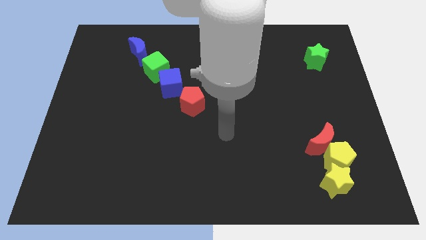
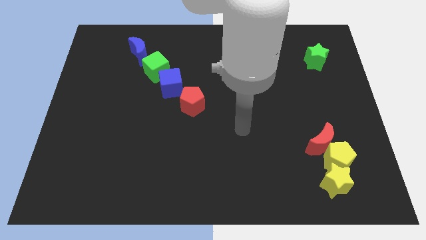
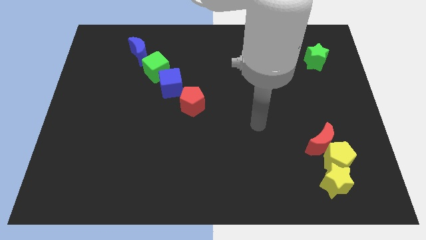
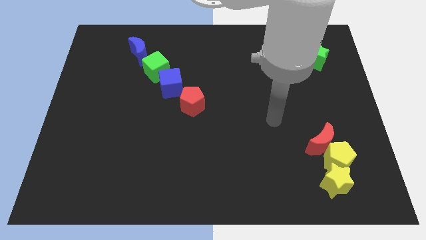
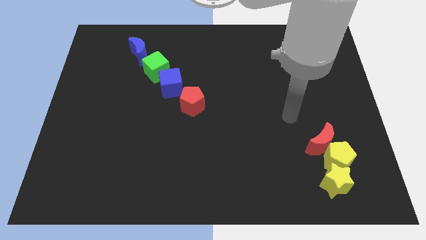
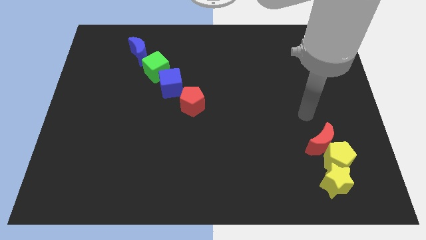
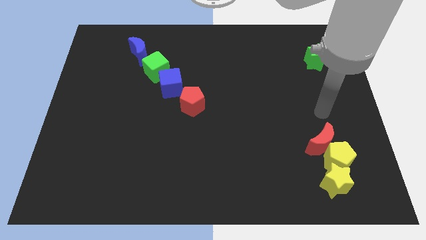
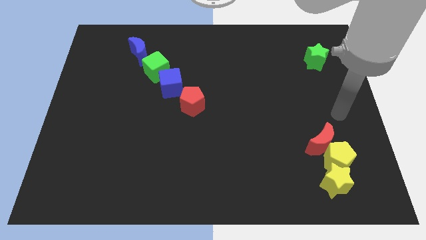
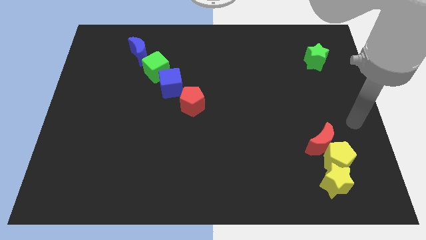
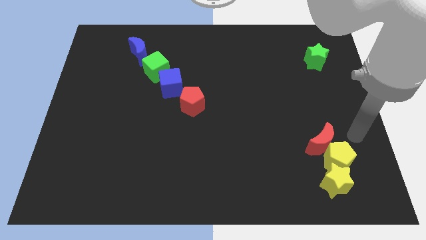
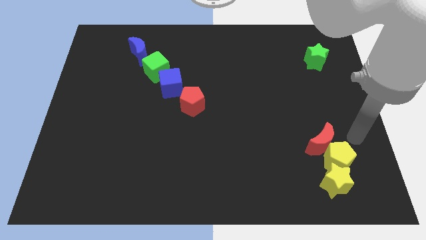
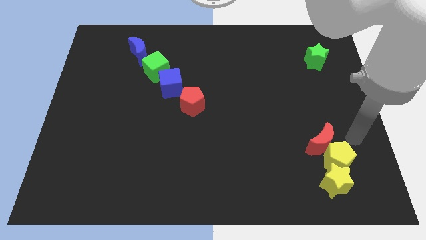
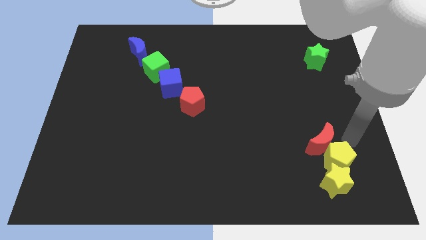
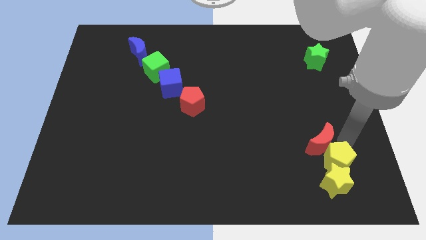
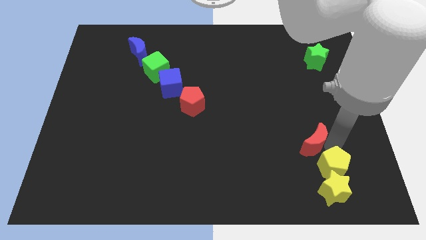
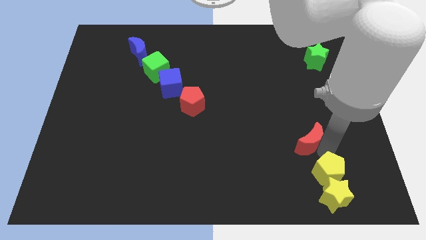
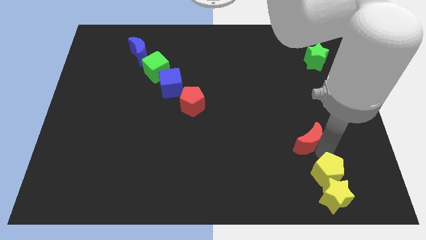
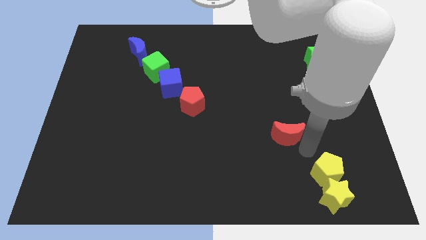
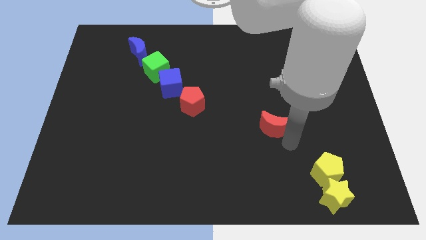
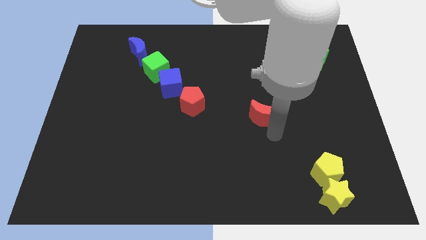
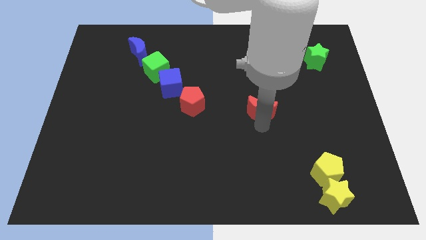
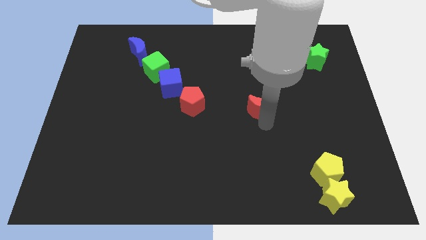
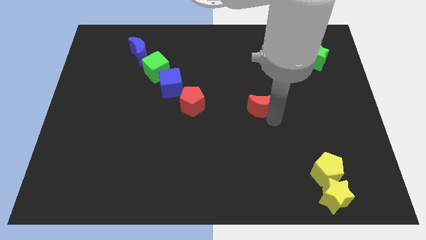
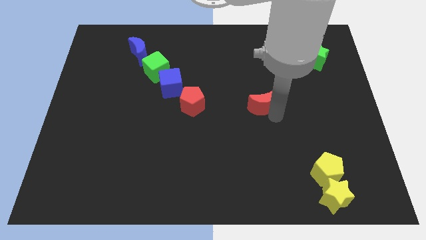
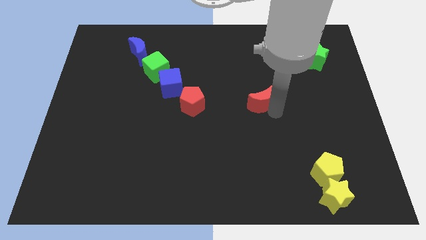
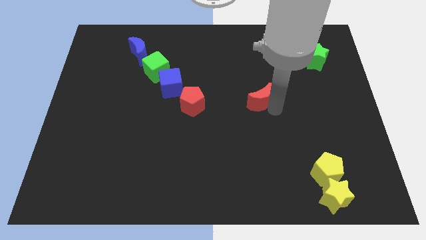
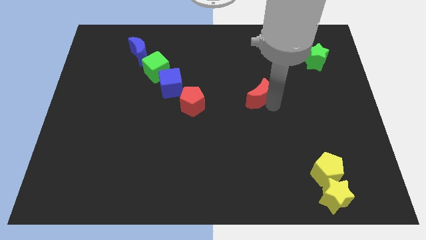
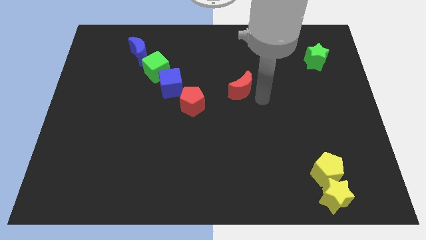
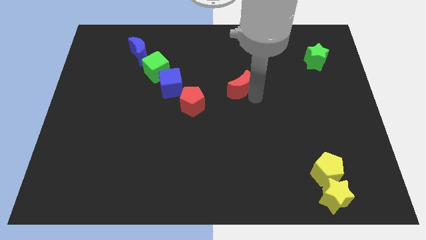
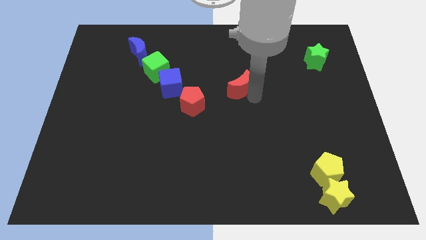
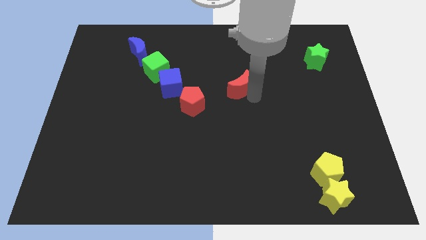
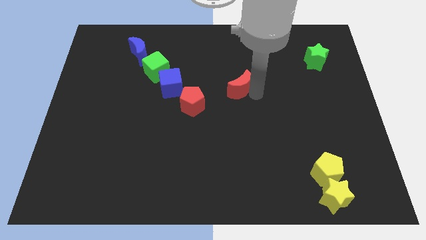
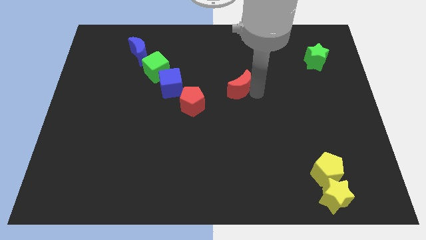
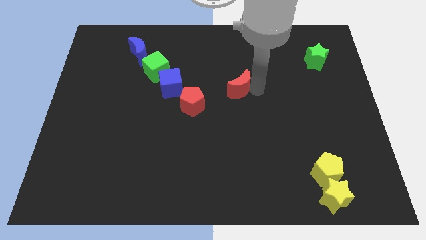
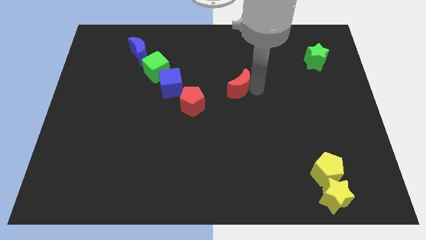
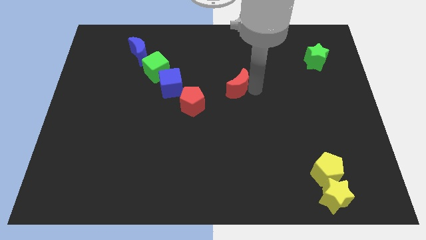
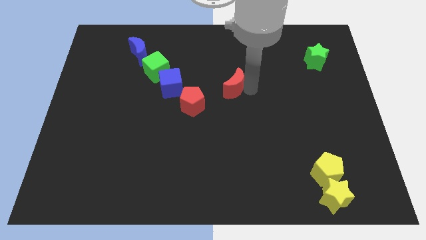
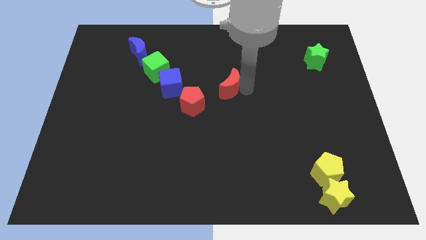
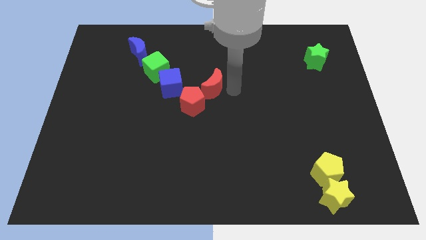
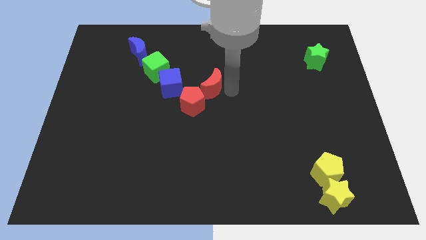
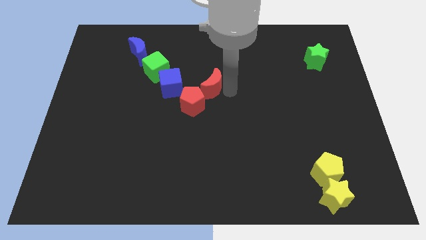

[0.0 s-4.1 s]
move the red crescent near to the red pentagon

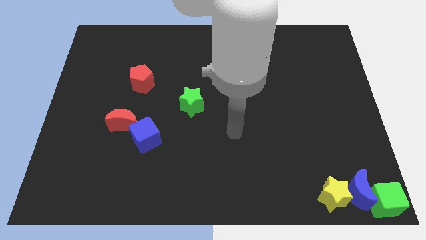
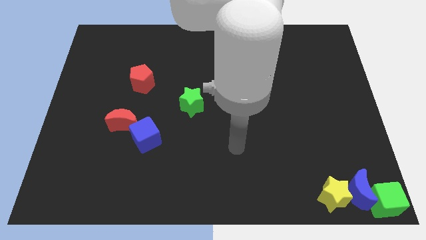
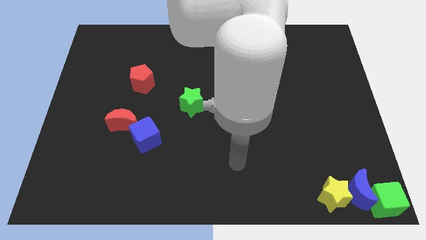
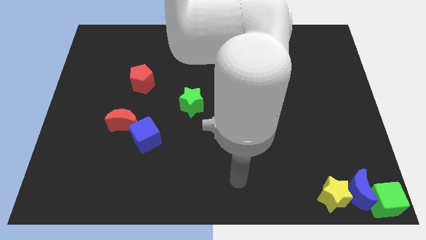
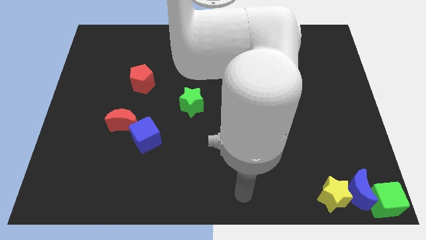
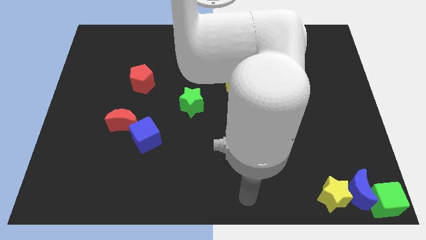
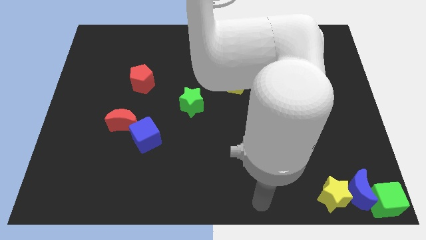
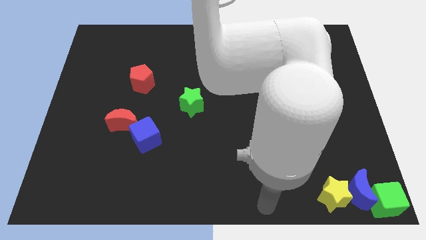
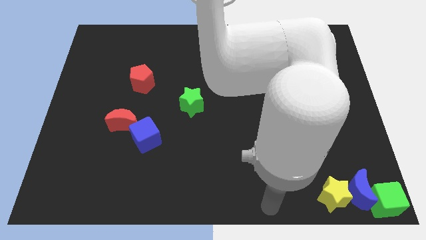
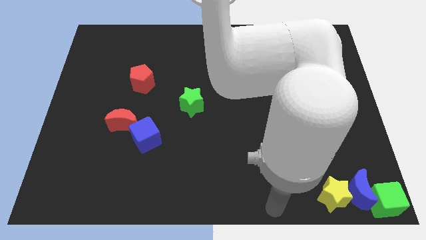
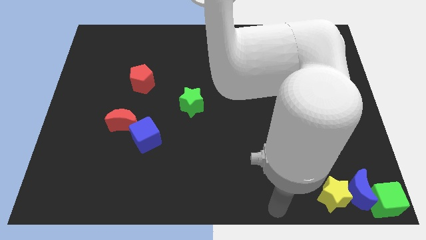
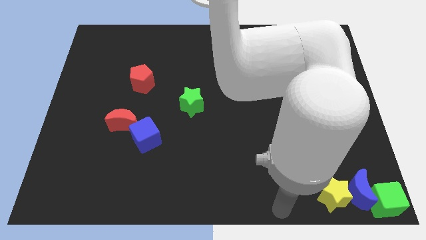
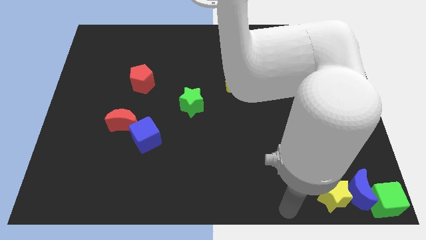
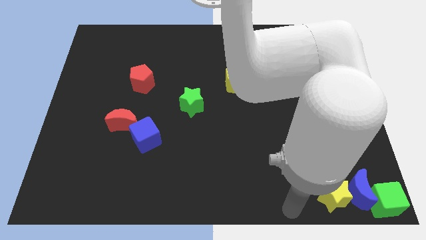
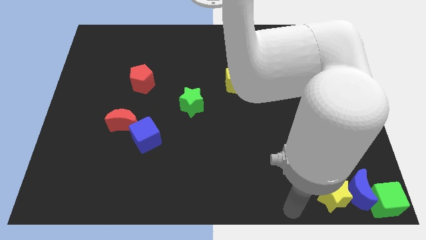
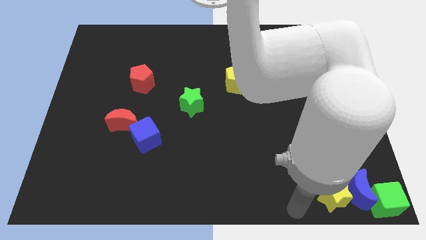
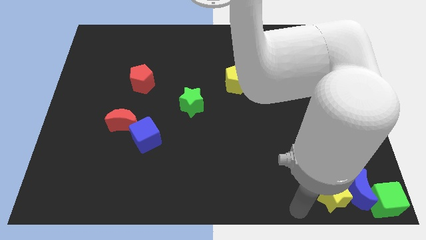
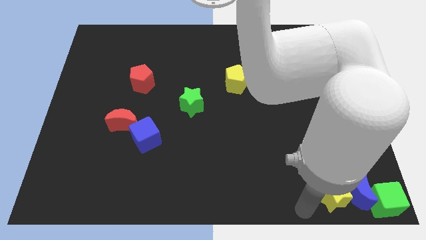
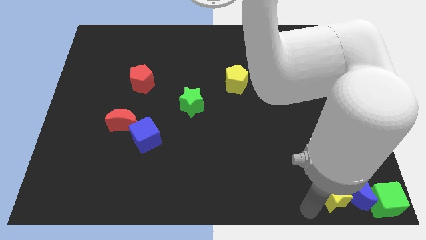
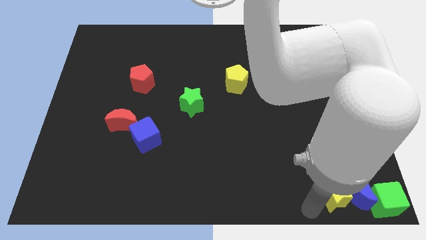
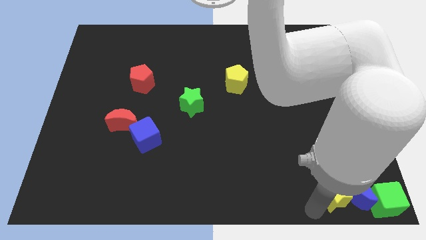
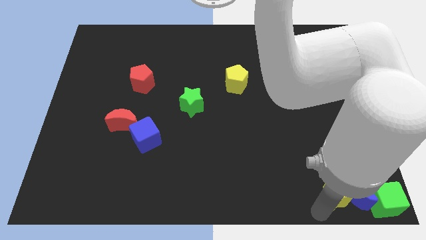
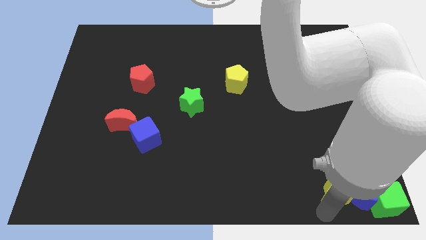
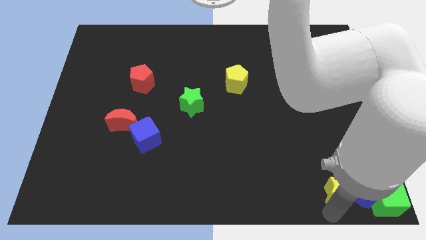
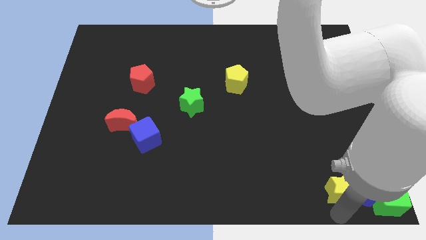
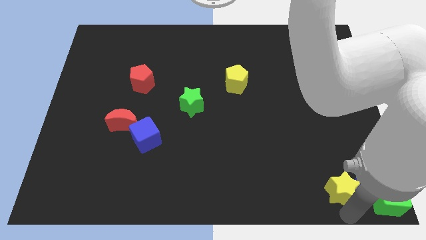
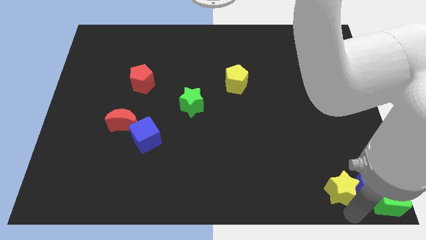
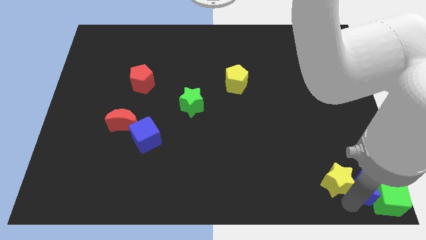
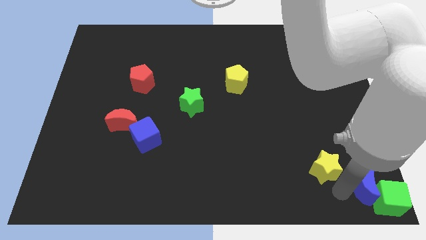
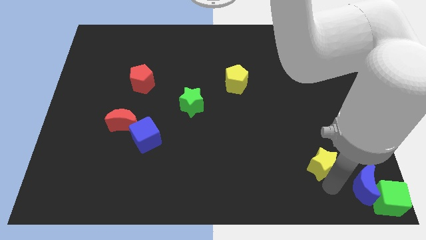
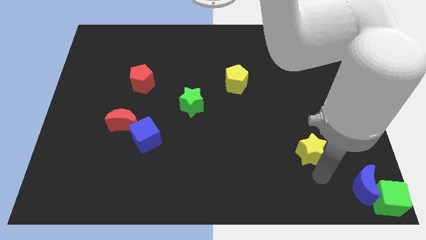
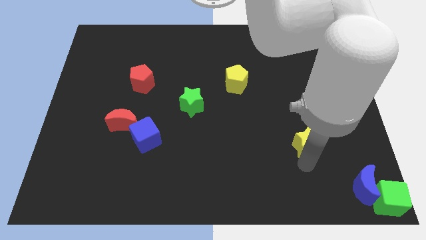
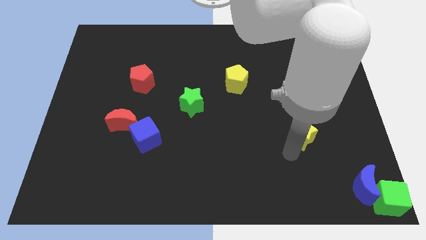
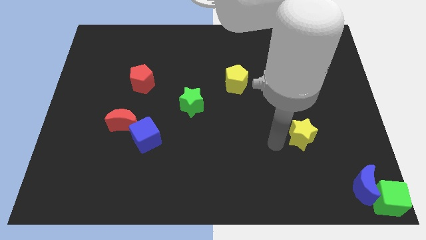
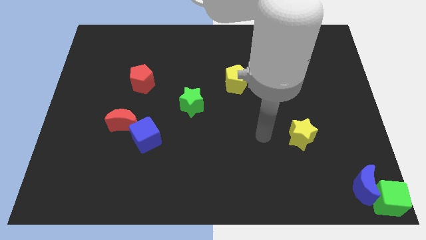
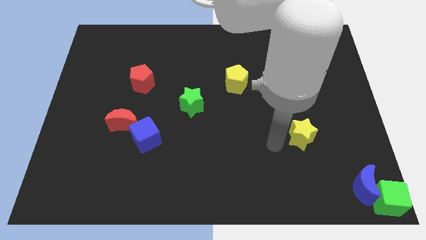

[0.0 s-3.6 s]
push the yellow star to the top of the board

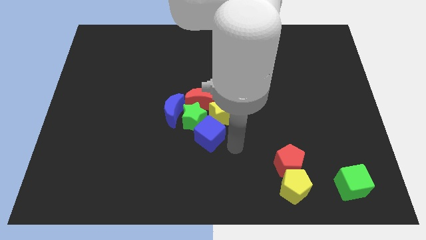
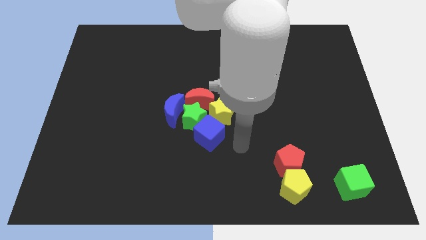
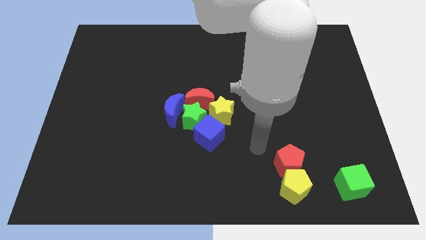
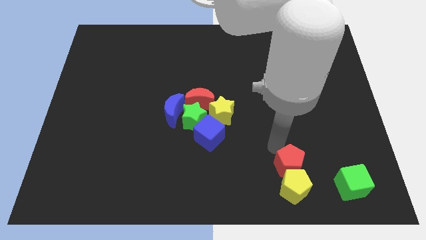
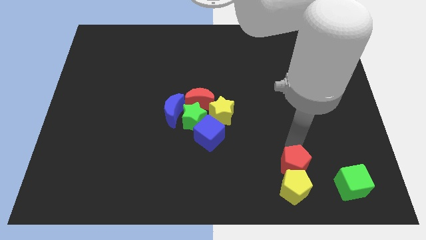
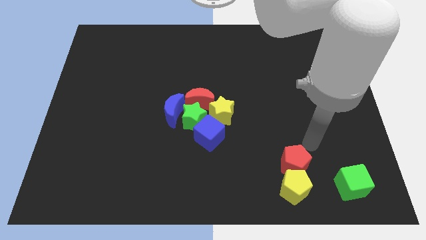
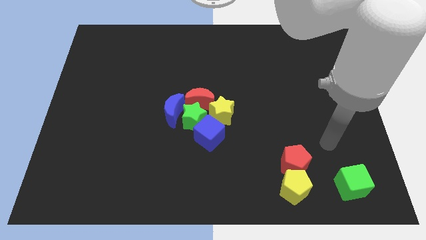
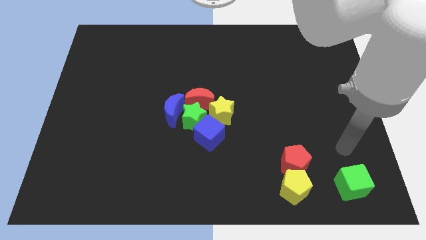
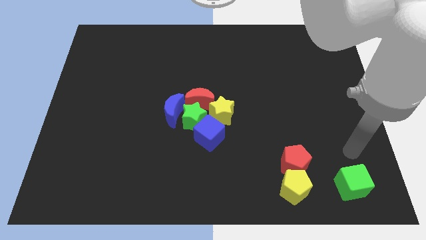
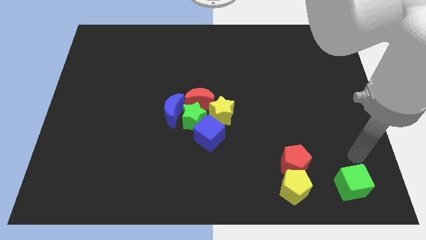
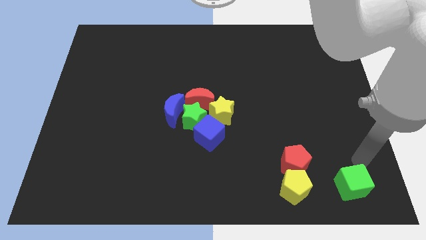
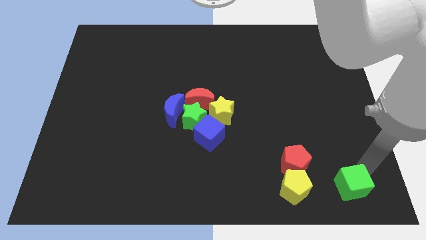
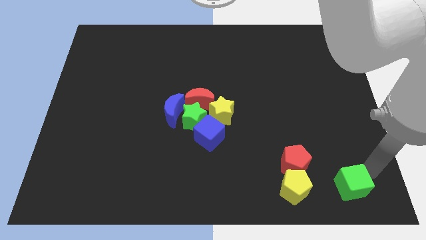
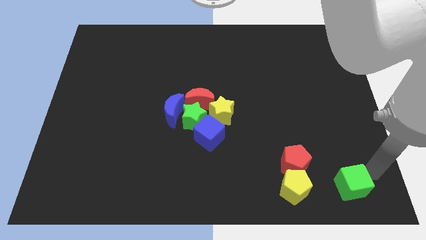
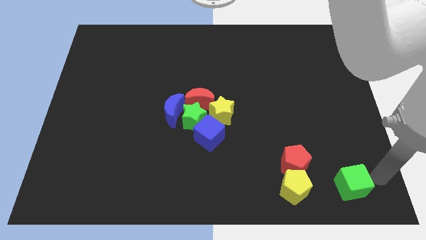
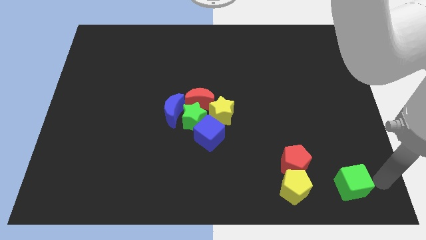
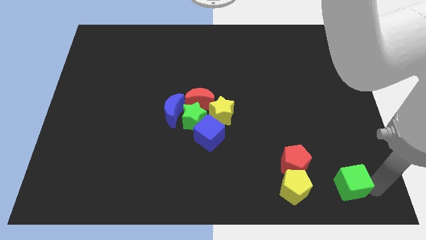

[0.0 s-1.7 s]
slightly touch the red pentagon and move away
